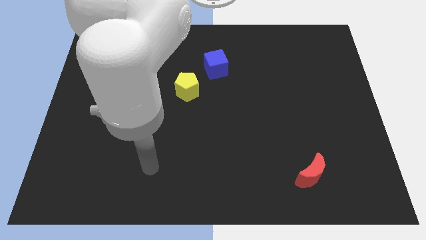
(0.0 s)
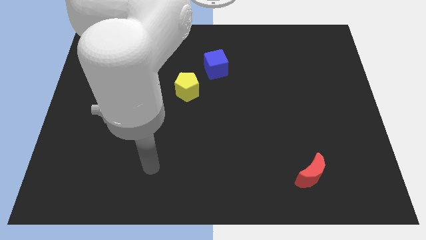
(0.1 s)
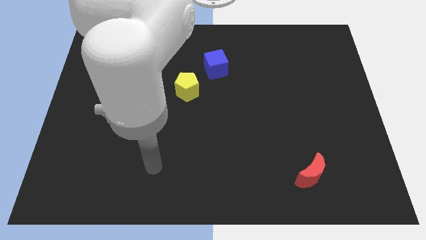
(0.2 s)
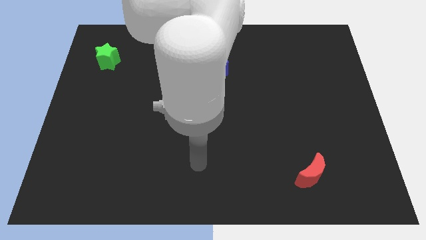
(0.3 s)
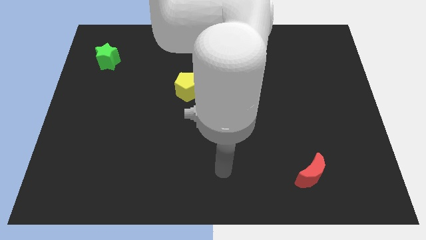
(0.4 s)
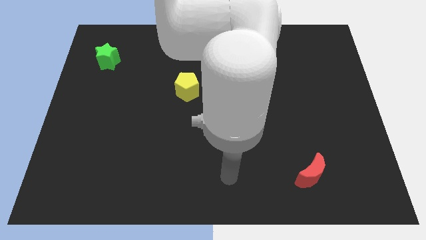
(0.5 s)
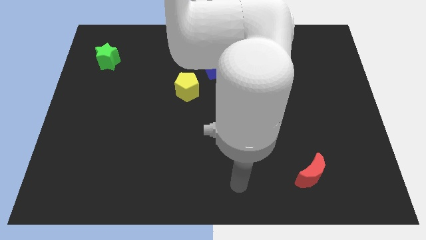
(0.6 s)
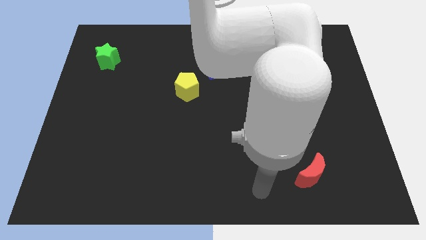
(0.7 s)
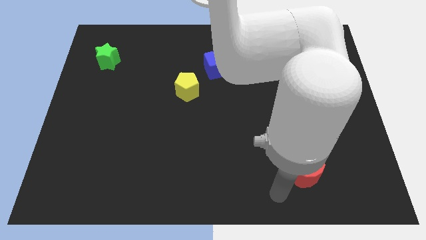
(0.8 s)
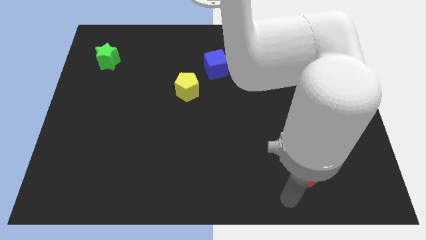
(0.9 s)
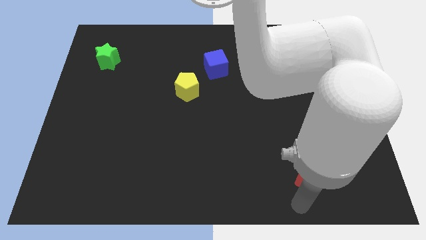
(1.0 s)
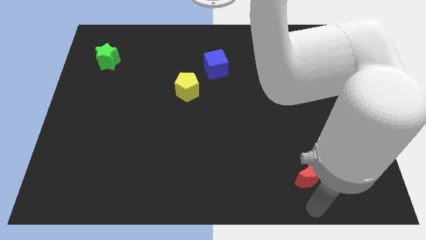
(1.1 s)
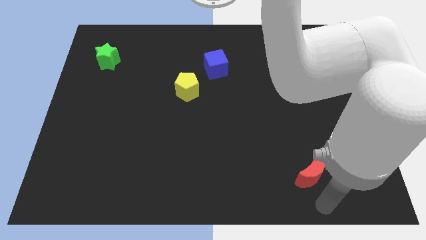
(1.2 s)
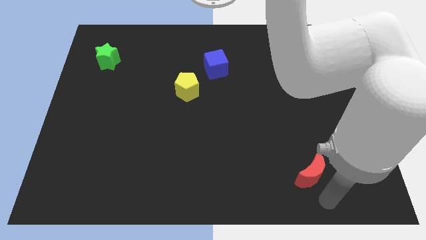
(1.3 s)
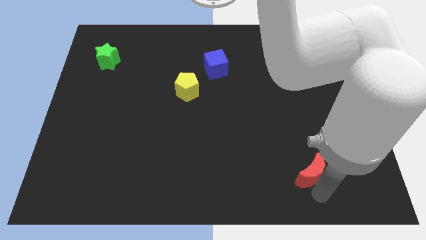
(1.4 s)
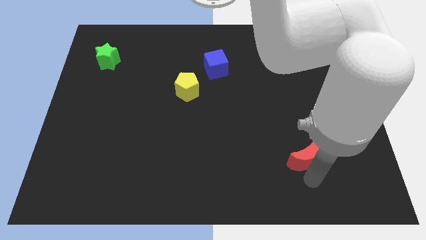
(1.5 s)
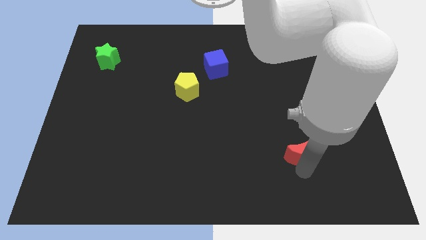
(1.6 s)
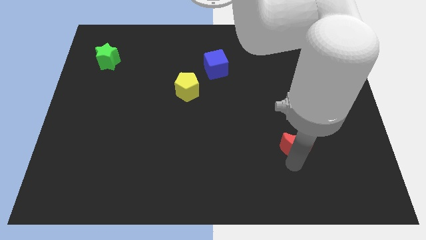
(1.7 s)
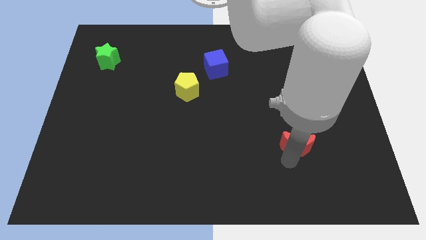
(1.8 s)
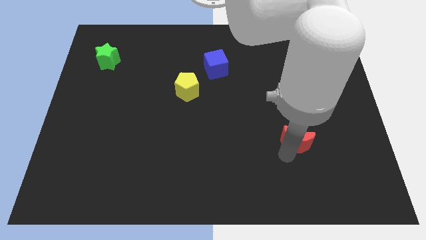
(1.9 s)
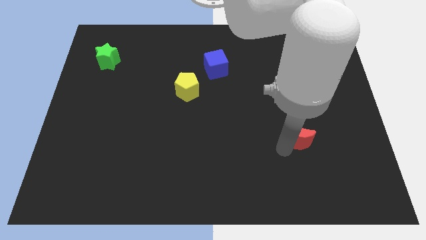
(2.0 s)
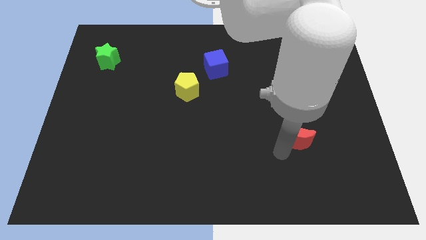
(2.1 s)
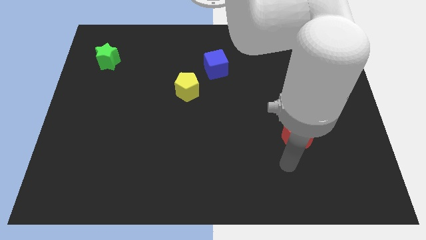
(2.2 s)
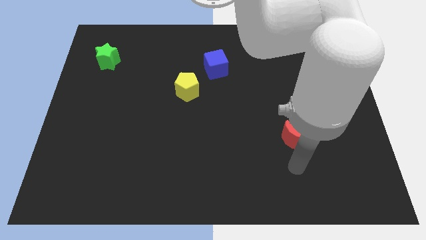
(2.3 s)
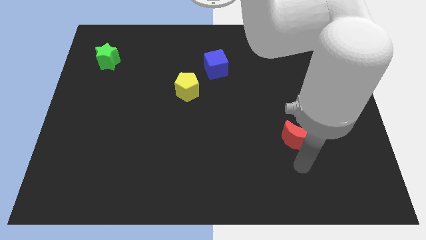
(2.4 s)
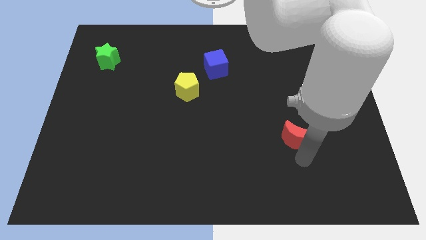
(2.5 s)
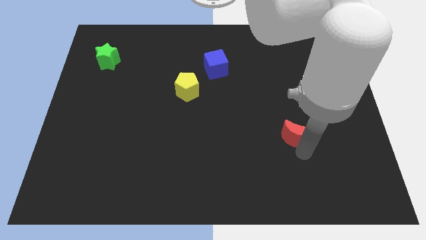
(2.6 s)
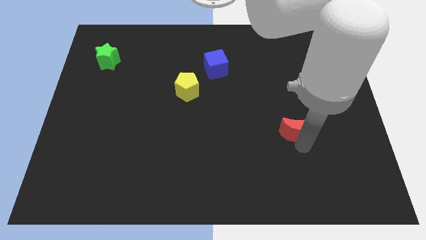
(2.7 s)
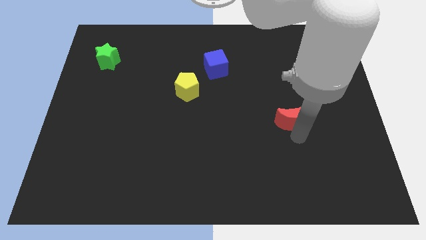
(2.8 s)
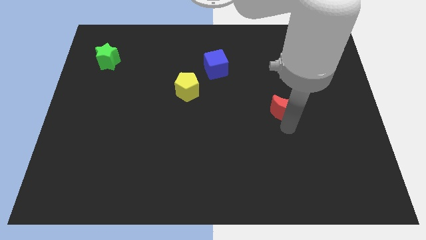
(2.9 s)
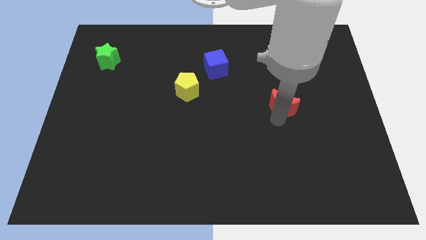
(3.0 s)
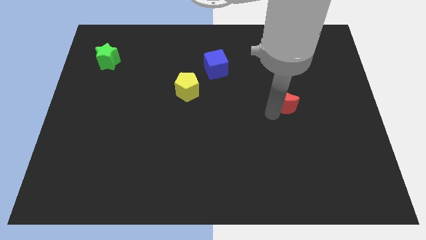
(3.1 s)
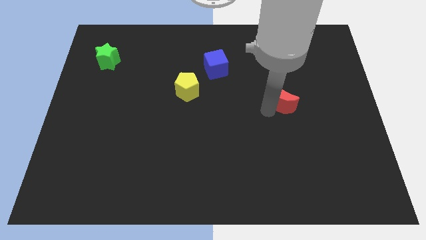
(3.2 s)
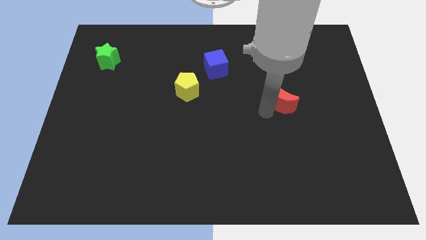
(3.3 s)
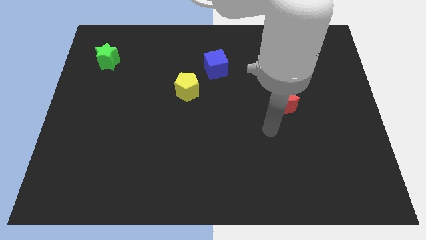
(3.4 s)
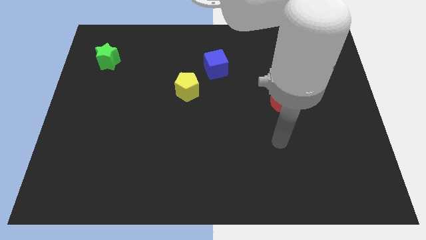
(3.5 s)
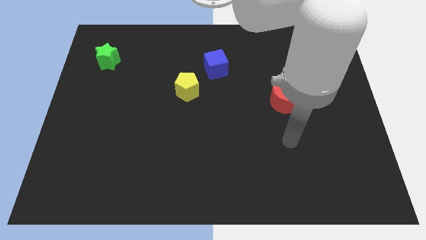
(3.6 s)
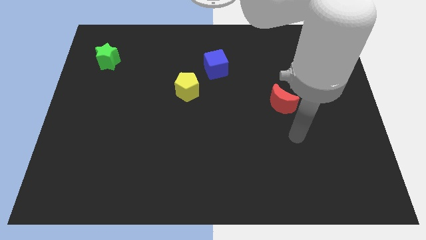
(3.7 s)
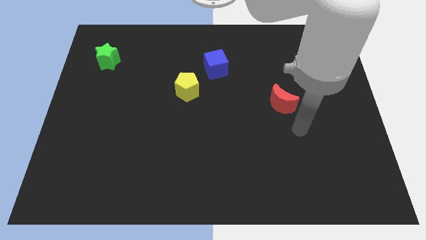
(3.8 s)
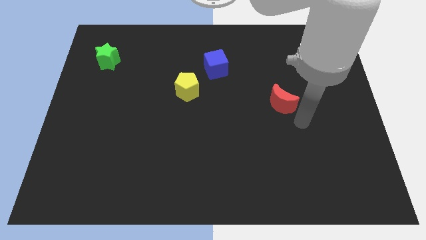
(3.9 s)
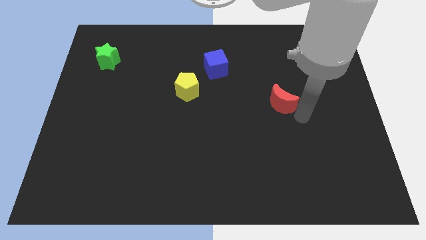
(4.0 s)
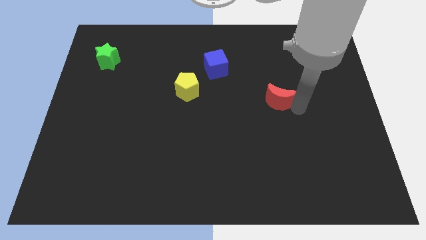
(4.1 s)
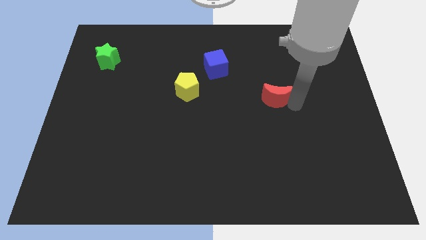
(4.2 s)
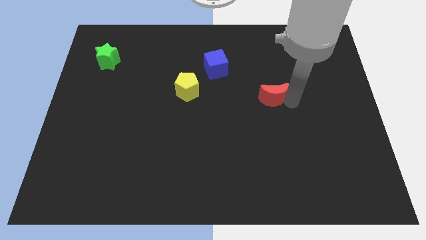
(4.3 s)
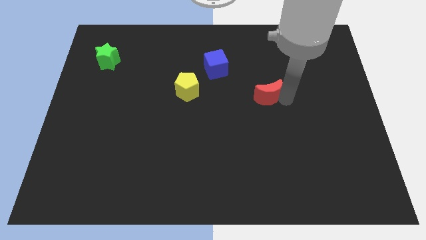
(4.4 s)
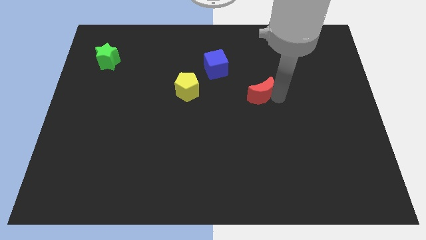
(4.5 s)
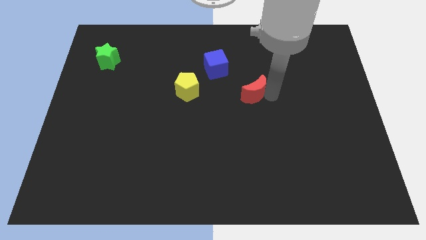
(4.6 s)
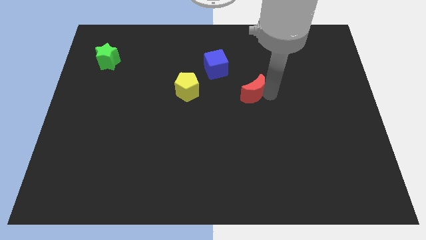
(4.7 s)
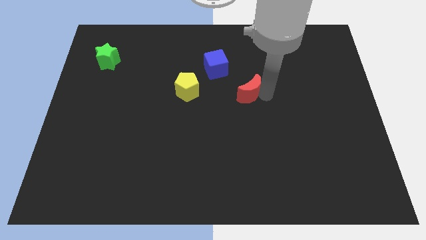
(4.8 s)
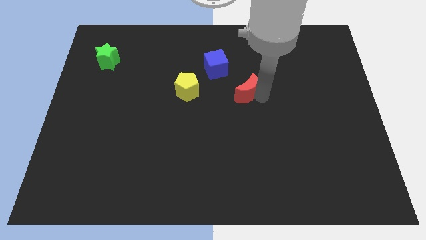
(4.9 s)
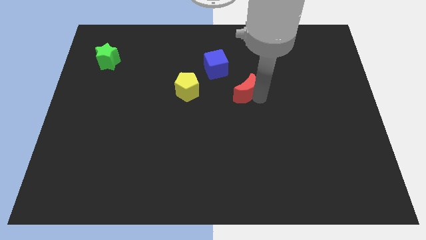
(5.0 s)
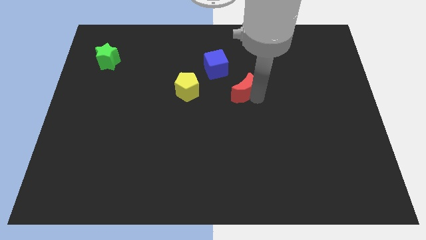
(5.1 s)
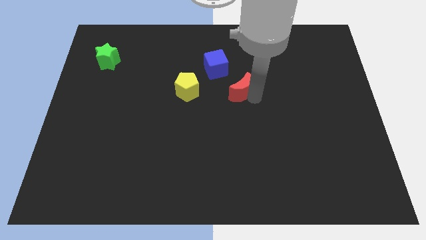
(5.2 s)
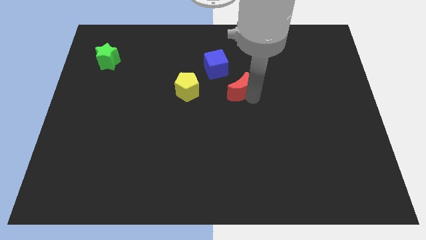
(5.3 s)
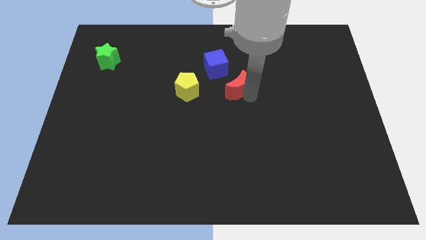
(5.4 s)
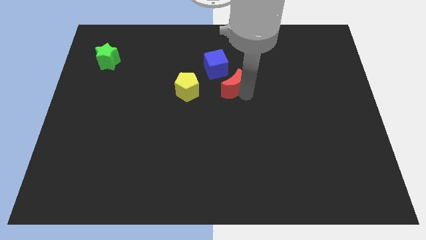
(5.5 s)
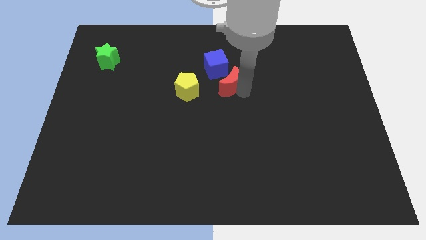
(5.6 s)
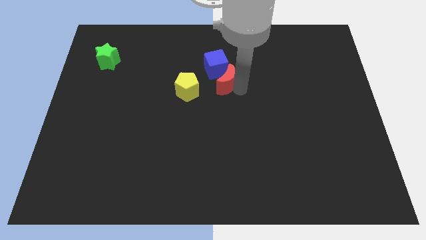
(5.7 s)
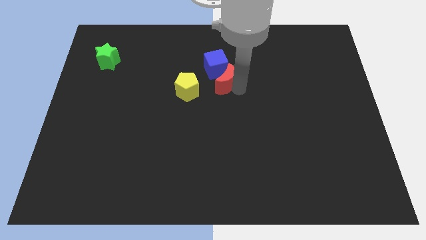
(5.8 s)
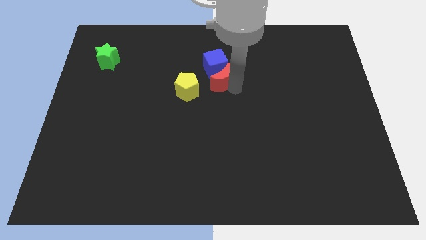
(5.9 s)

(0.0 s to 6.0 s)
move the red block next to the blue cube

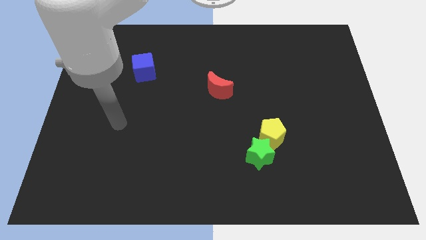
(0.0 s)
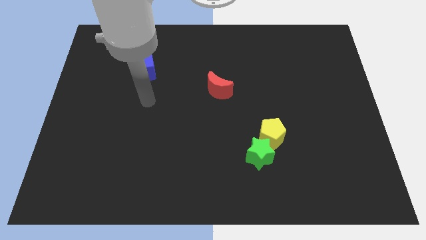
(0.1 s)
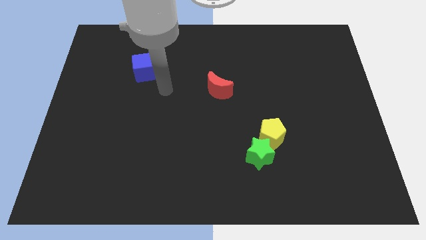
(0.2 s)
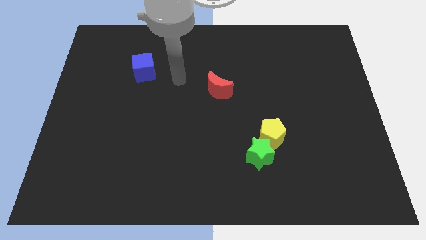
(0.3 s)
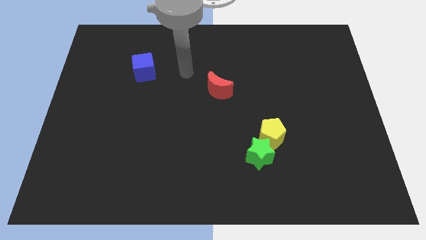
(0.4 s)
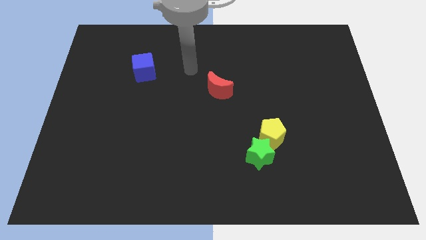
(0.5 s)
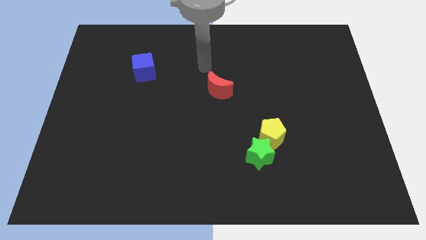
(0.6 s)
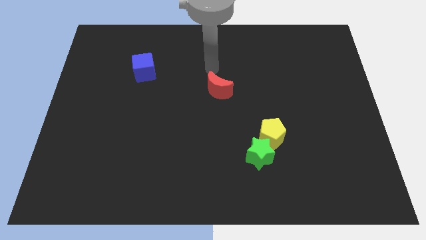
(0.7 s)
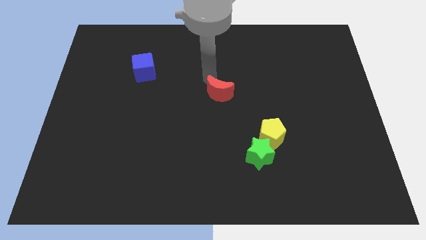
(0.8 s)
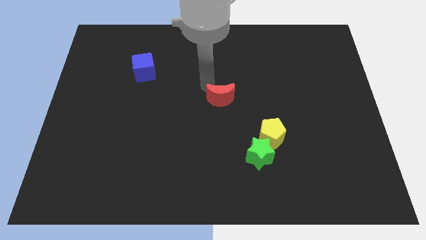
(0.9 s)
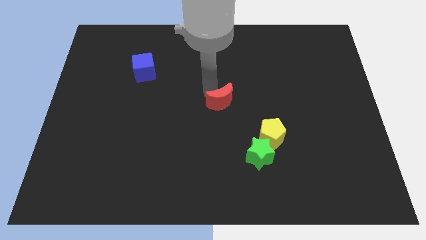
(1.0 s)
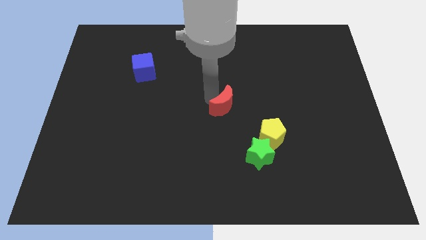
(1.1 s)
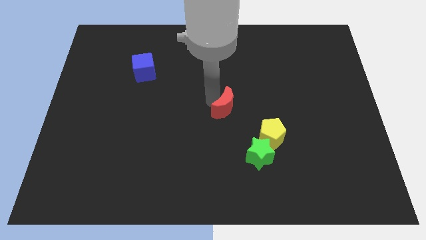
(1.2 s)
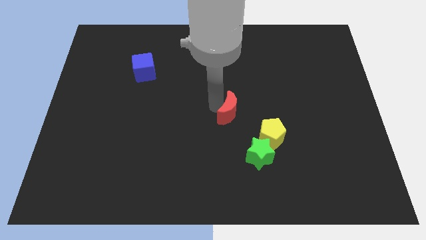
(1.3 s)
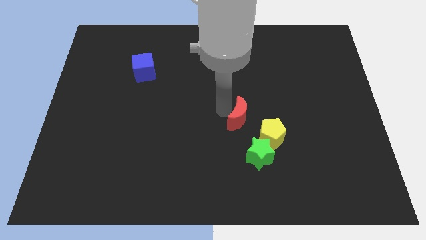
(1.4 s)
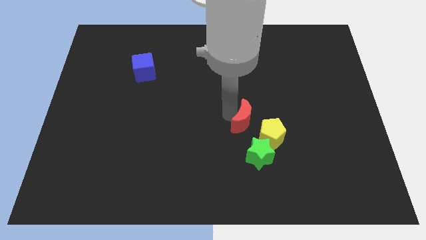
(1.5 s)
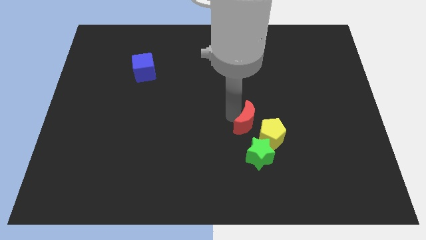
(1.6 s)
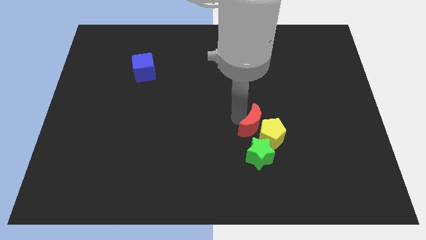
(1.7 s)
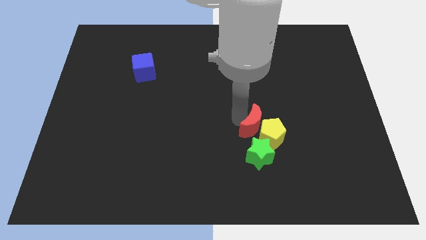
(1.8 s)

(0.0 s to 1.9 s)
slide the moon close to the yellow pentagon

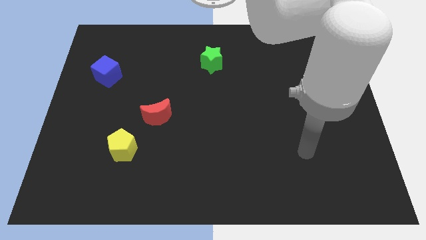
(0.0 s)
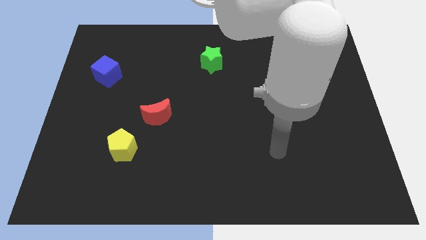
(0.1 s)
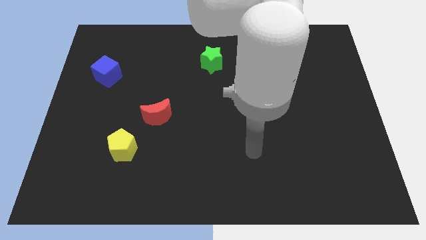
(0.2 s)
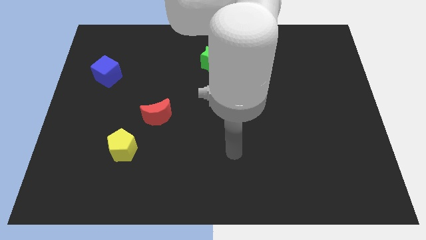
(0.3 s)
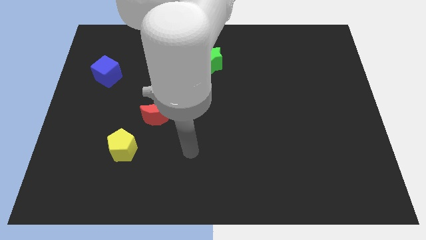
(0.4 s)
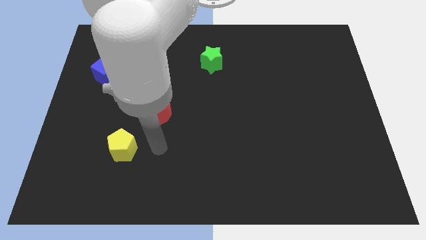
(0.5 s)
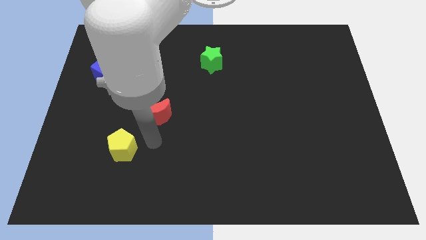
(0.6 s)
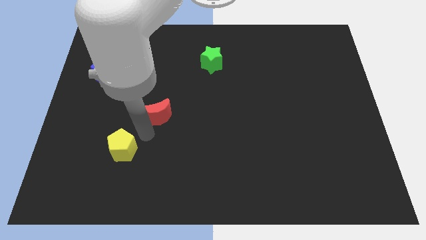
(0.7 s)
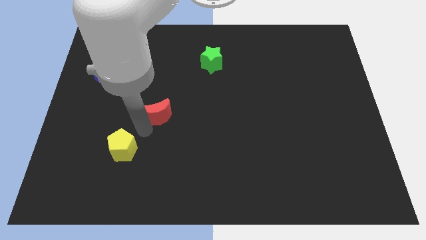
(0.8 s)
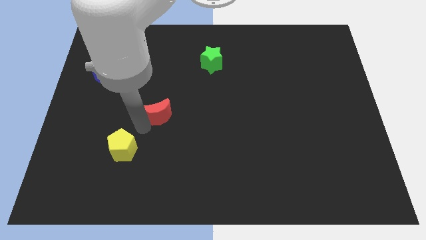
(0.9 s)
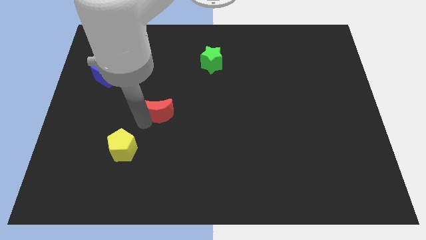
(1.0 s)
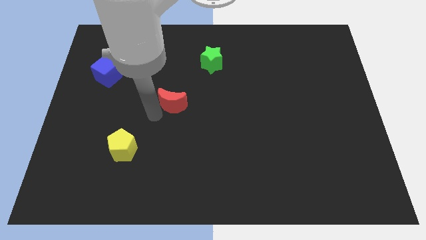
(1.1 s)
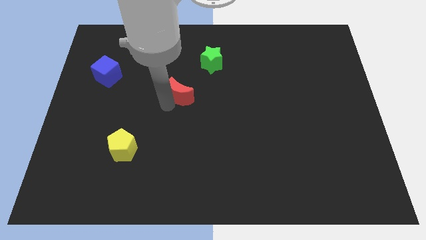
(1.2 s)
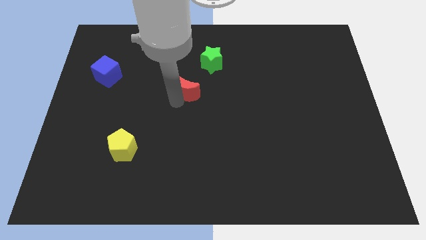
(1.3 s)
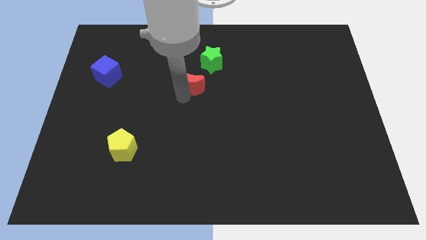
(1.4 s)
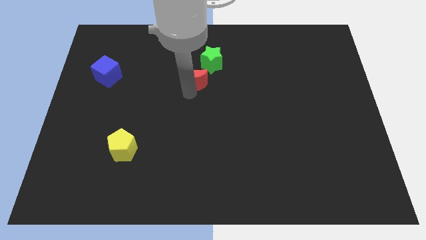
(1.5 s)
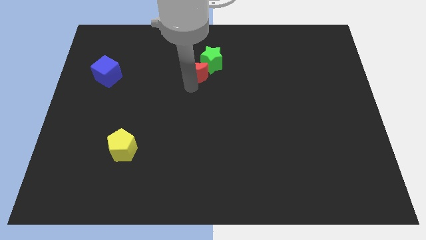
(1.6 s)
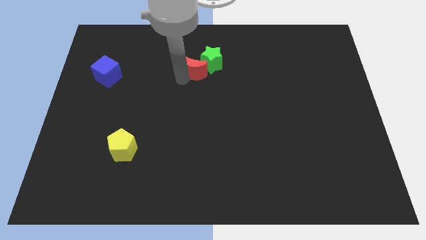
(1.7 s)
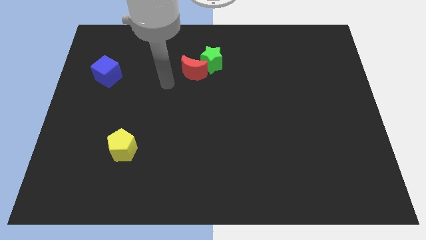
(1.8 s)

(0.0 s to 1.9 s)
move the red block to the green star
